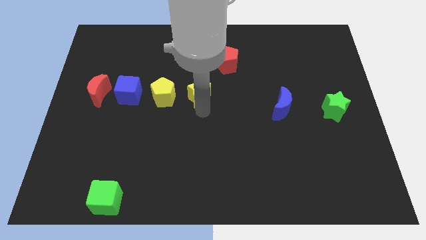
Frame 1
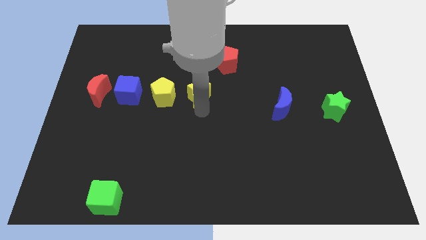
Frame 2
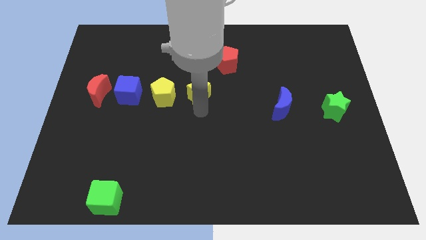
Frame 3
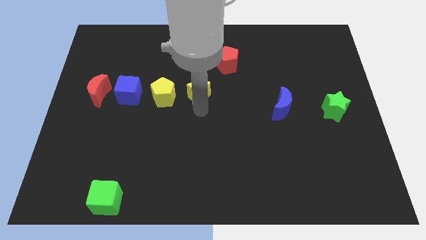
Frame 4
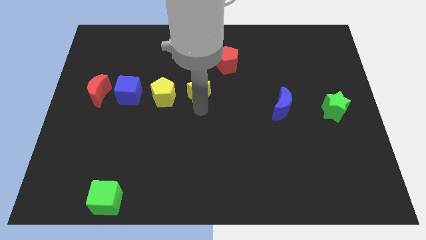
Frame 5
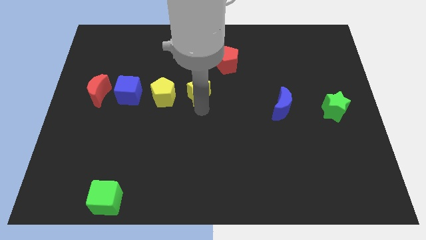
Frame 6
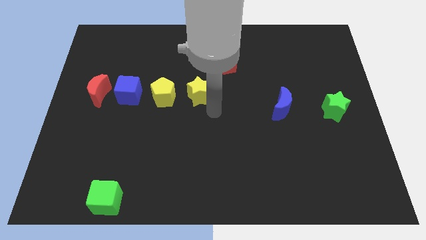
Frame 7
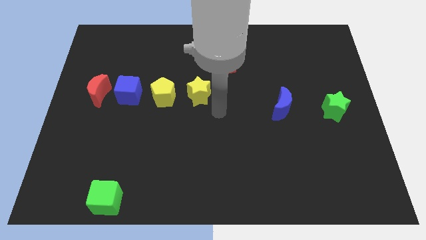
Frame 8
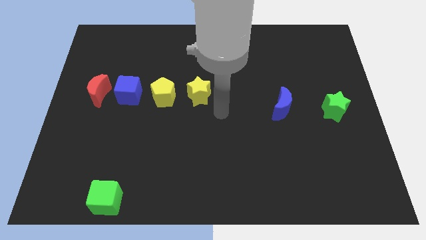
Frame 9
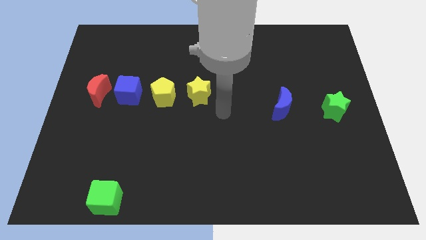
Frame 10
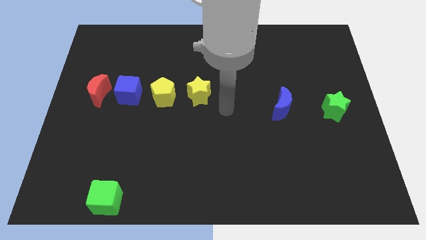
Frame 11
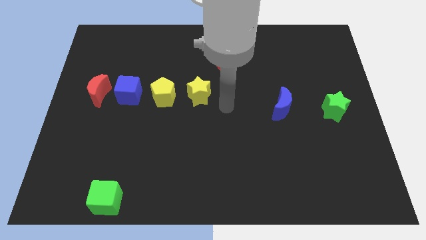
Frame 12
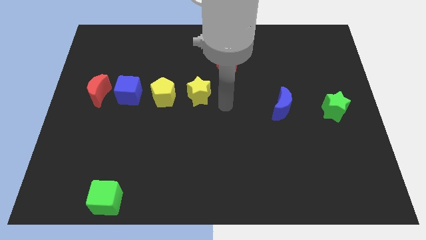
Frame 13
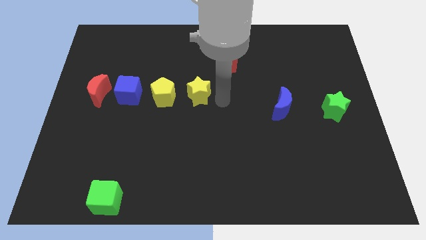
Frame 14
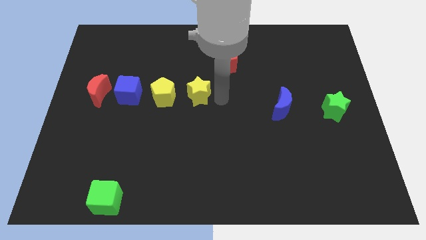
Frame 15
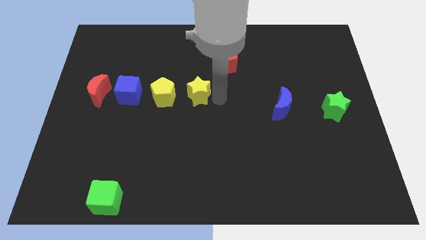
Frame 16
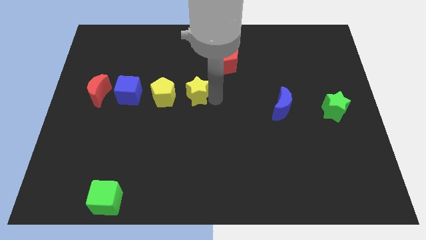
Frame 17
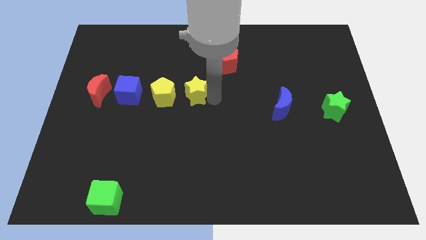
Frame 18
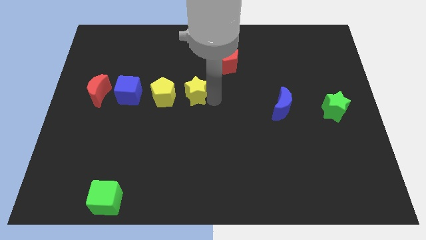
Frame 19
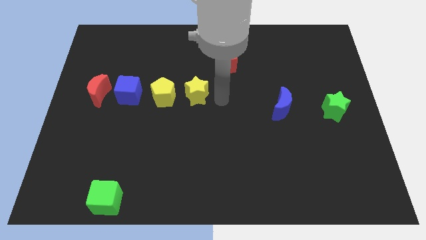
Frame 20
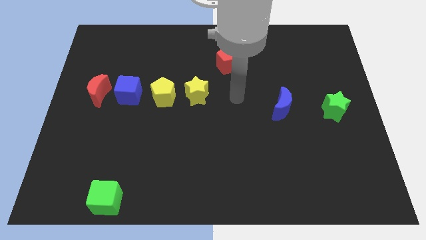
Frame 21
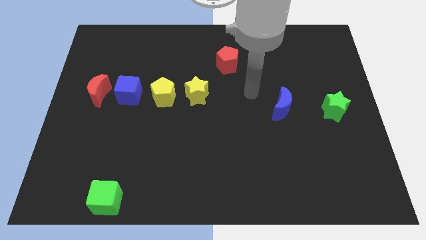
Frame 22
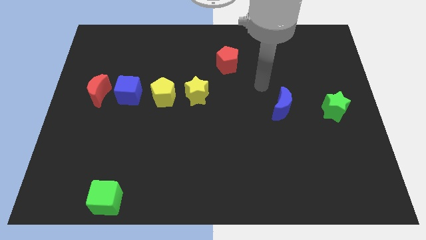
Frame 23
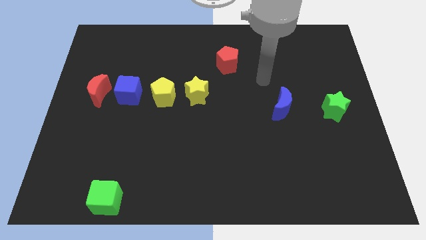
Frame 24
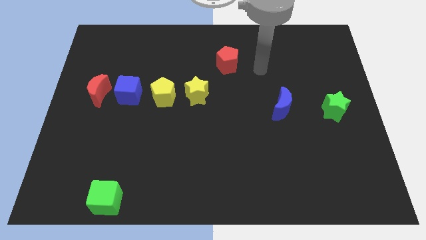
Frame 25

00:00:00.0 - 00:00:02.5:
place the yellow star diagonal to the red pentagon

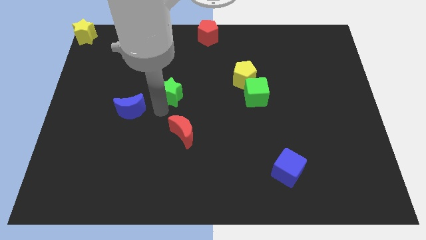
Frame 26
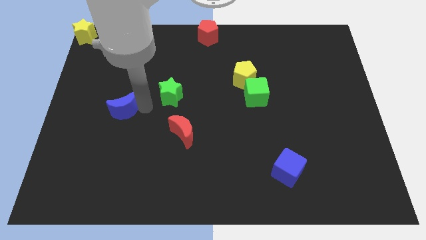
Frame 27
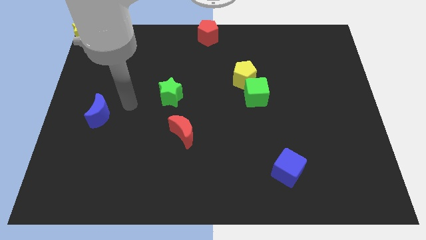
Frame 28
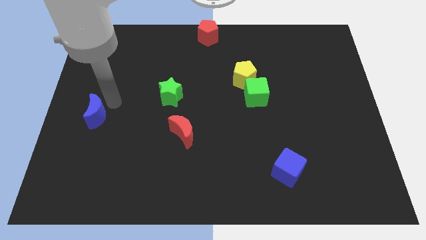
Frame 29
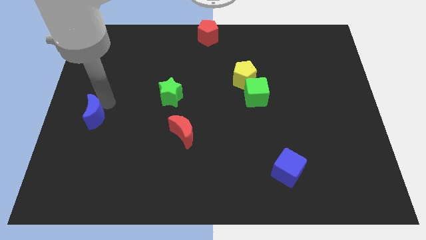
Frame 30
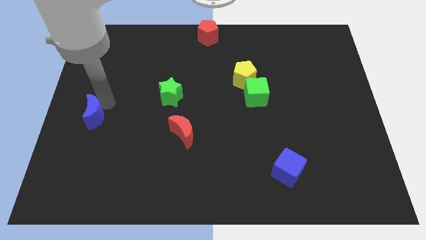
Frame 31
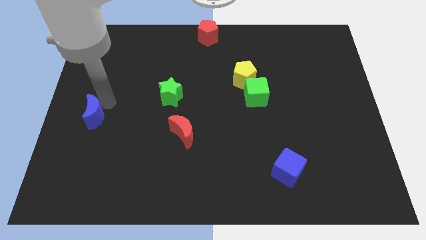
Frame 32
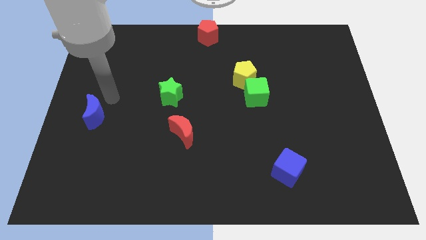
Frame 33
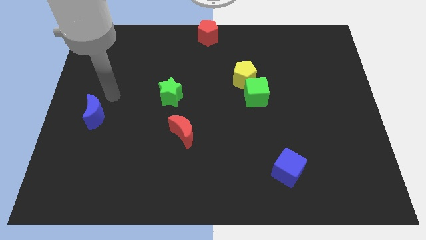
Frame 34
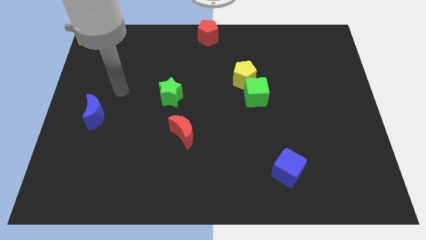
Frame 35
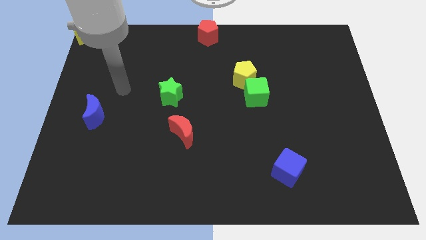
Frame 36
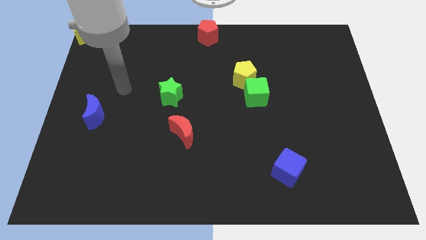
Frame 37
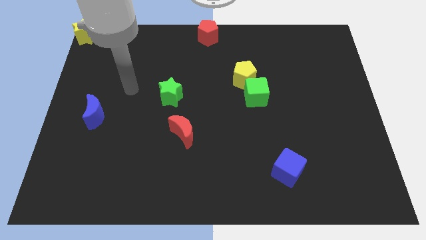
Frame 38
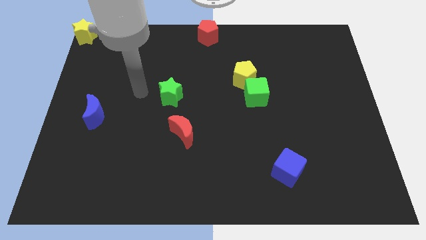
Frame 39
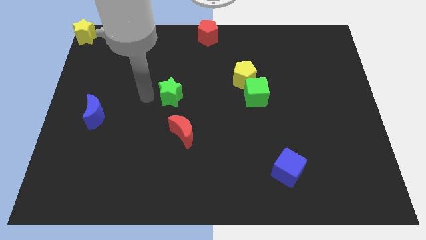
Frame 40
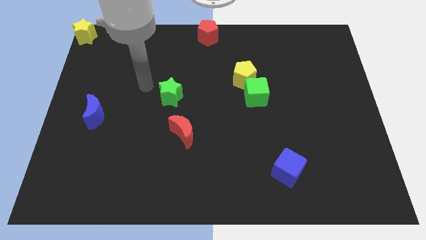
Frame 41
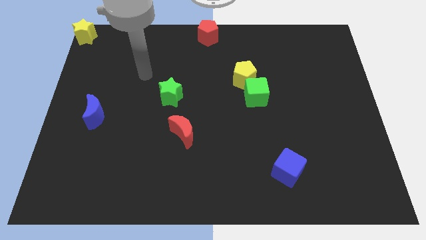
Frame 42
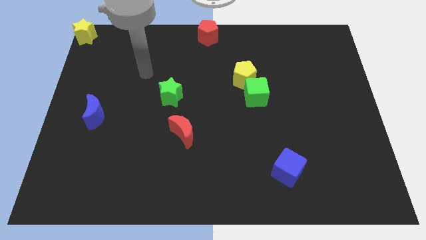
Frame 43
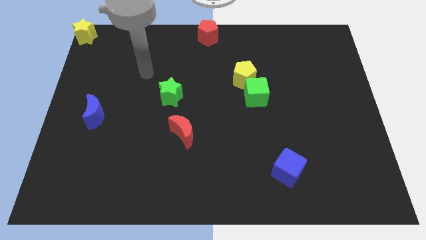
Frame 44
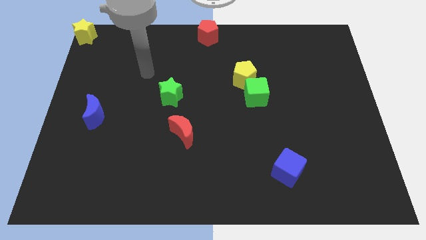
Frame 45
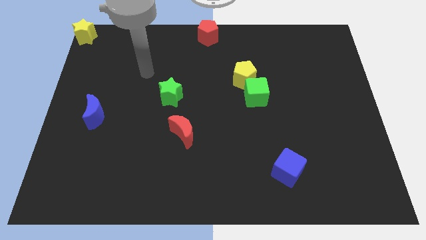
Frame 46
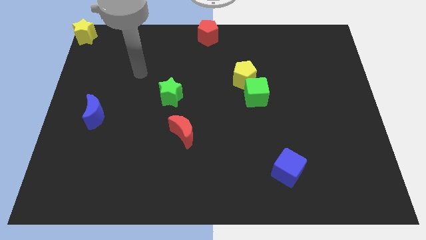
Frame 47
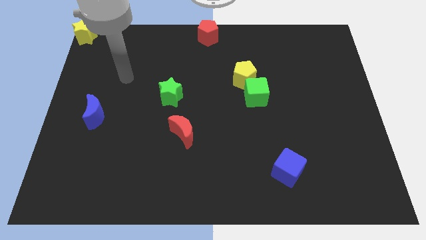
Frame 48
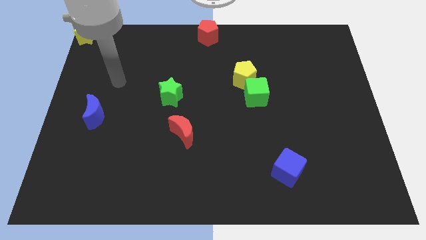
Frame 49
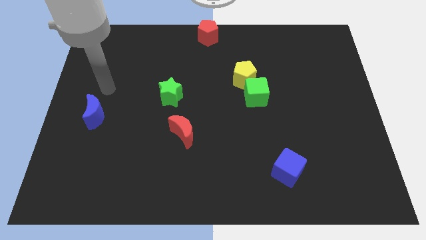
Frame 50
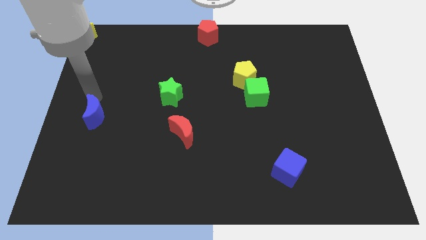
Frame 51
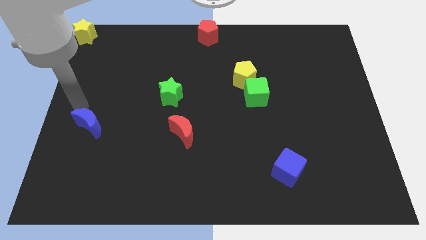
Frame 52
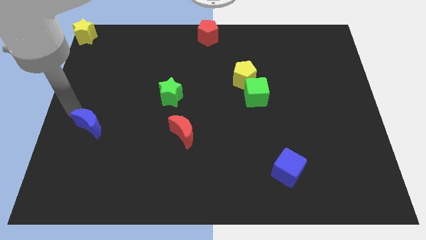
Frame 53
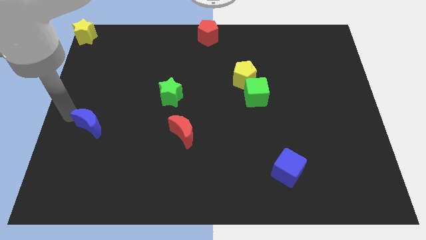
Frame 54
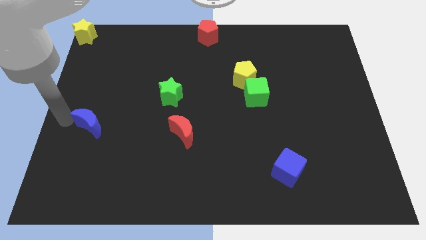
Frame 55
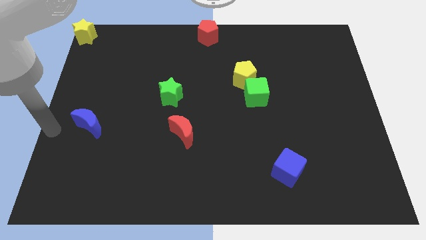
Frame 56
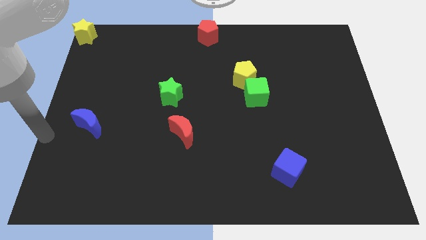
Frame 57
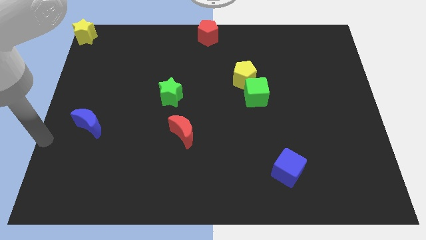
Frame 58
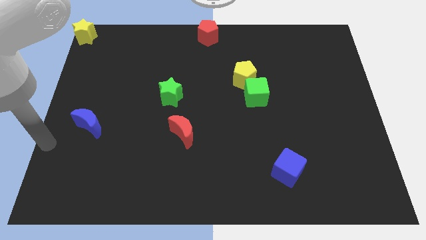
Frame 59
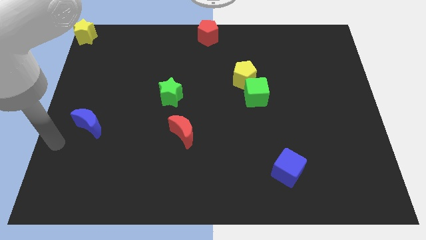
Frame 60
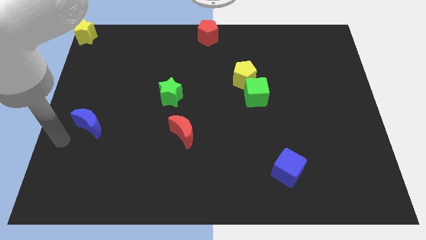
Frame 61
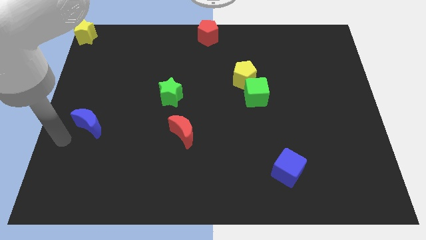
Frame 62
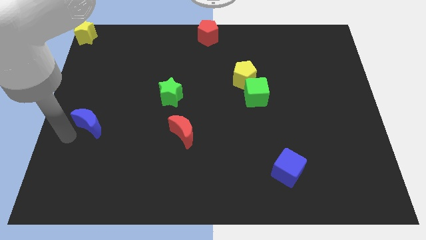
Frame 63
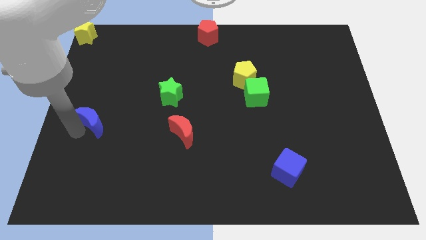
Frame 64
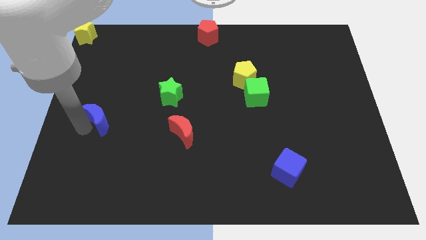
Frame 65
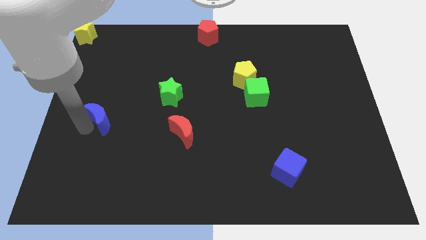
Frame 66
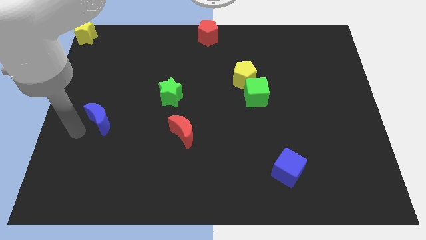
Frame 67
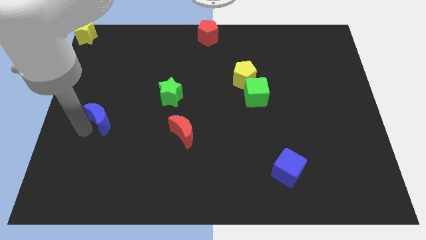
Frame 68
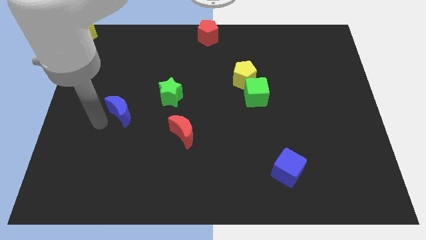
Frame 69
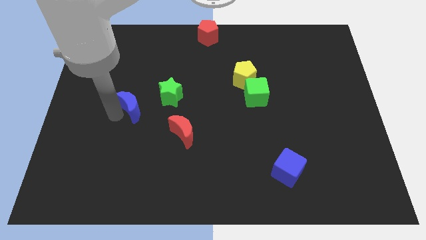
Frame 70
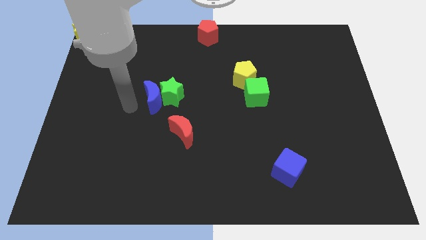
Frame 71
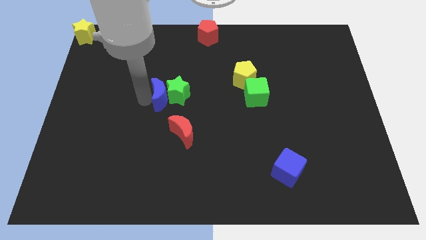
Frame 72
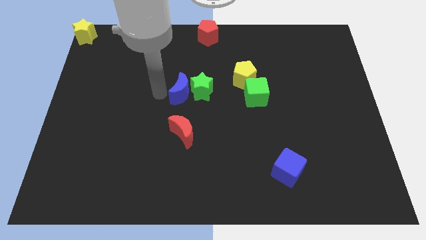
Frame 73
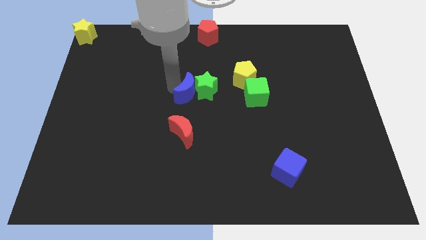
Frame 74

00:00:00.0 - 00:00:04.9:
put the blue moon vertically above the red moon

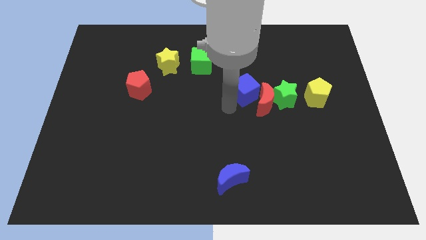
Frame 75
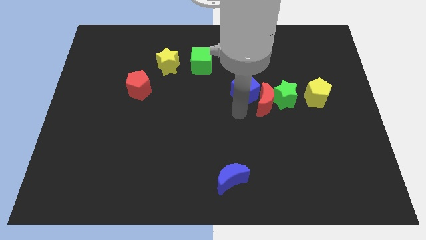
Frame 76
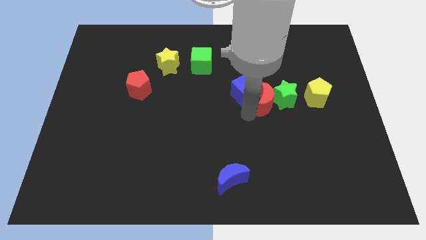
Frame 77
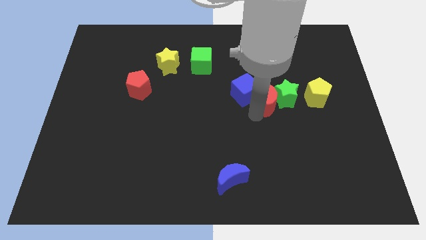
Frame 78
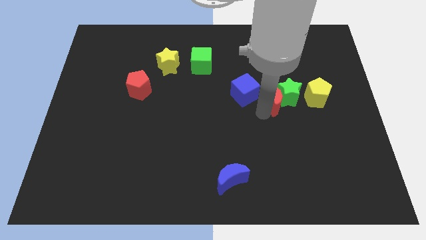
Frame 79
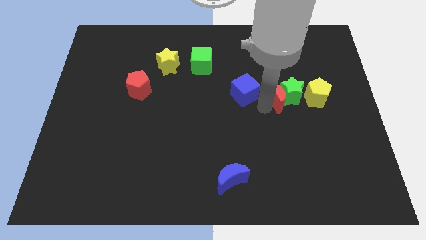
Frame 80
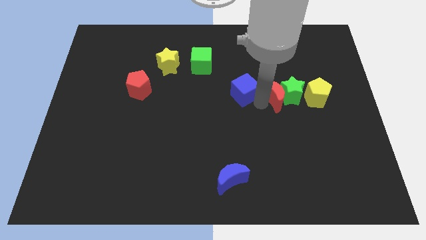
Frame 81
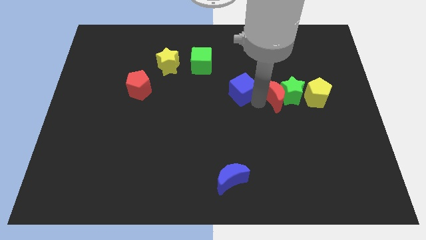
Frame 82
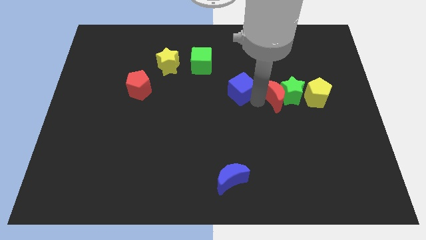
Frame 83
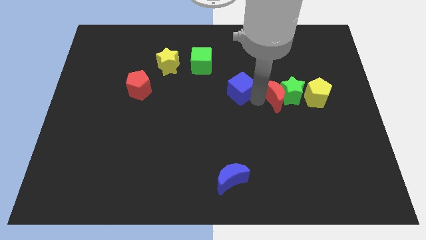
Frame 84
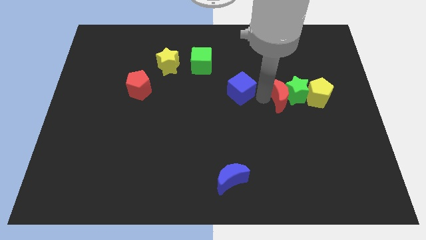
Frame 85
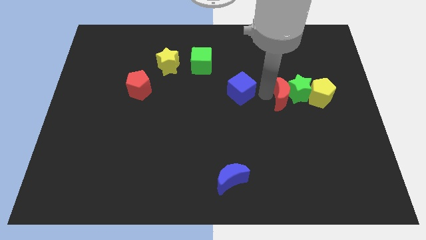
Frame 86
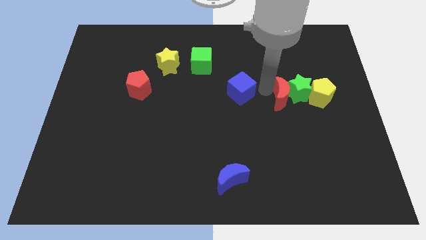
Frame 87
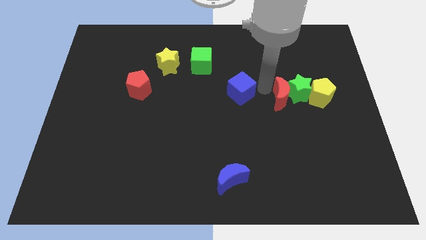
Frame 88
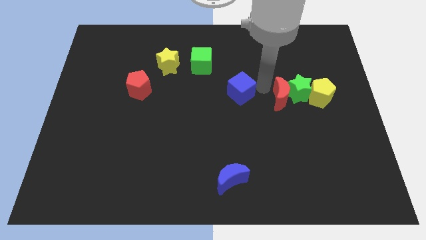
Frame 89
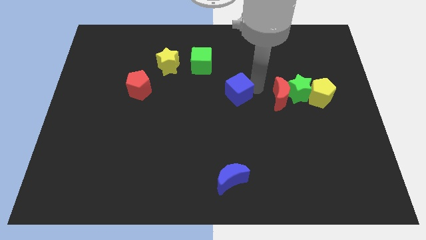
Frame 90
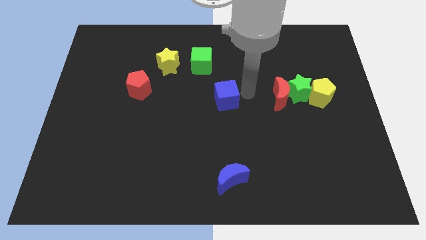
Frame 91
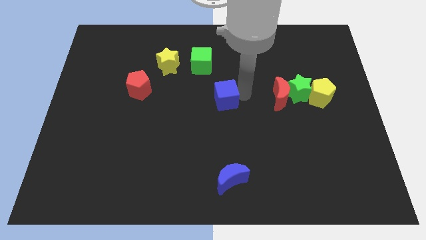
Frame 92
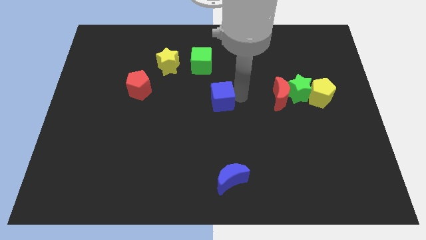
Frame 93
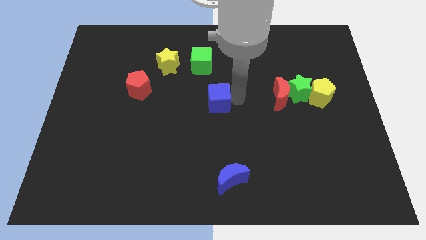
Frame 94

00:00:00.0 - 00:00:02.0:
move the blue block and red crescent apart from each other
